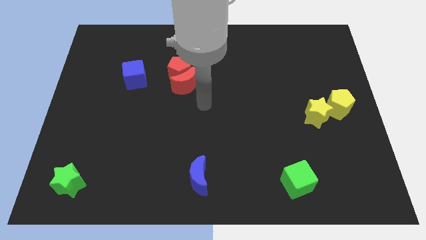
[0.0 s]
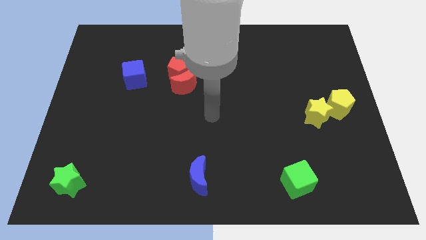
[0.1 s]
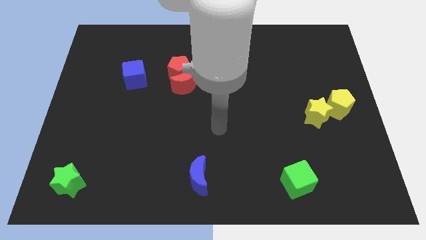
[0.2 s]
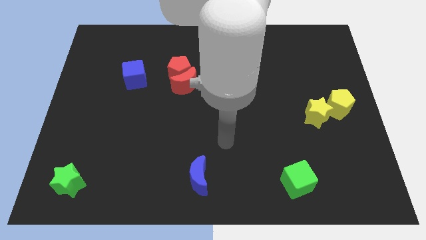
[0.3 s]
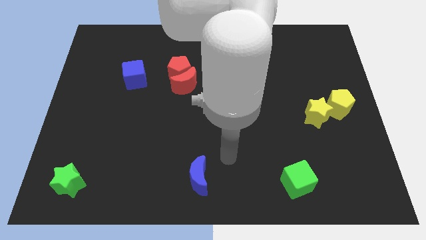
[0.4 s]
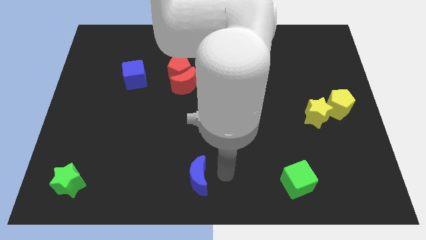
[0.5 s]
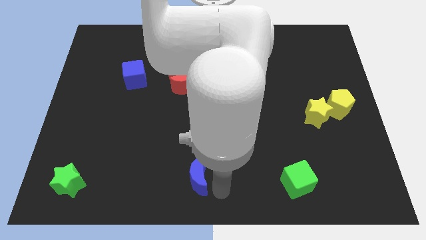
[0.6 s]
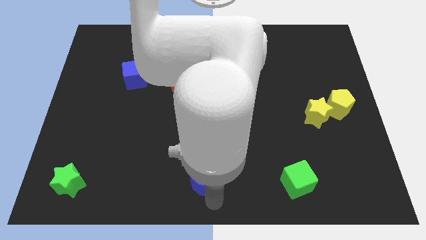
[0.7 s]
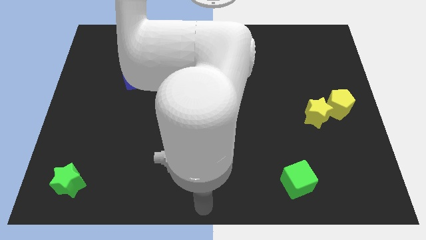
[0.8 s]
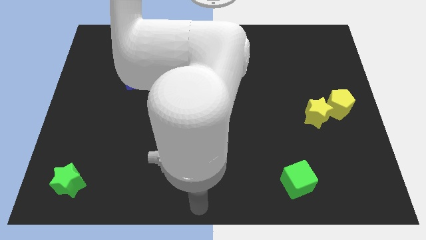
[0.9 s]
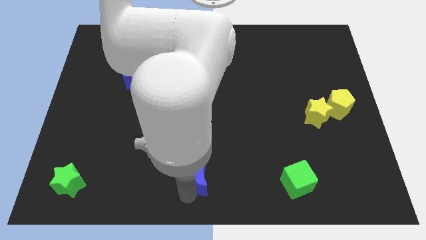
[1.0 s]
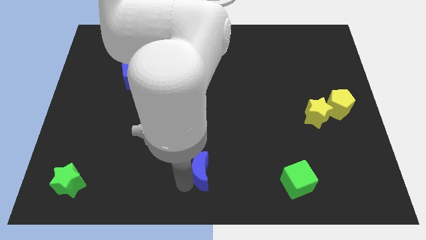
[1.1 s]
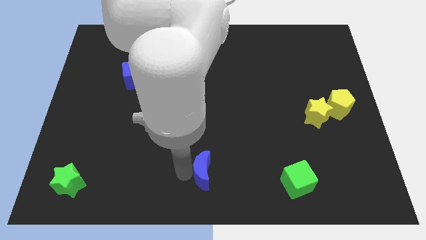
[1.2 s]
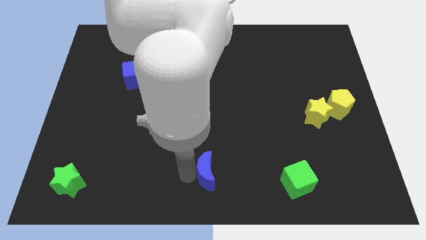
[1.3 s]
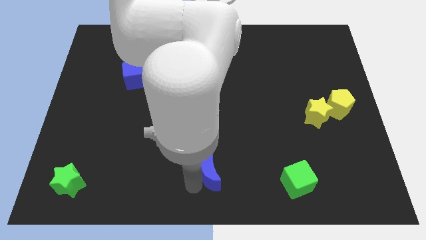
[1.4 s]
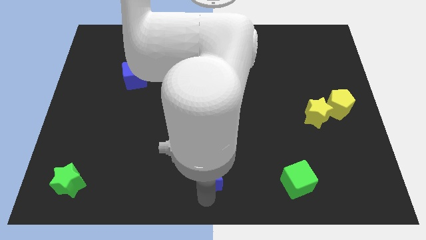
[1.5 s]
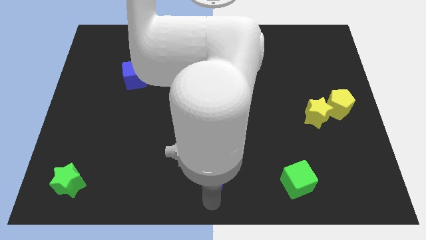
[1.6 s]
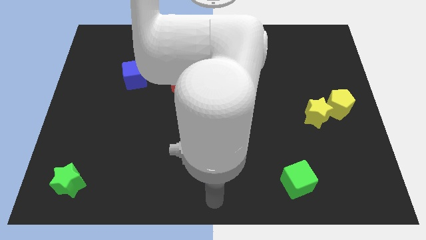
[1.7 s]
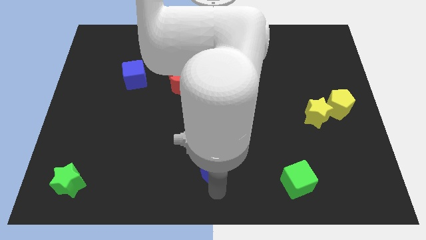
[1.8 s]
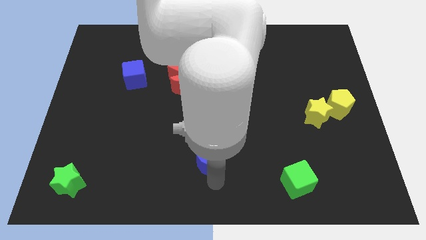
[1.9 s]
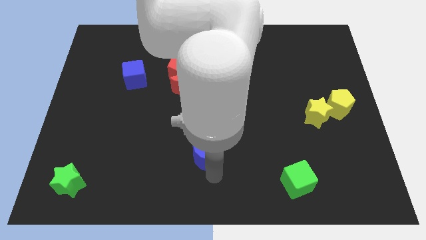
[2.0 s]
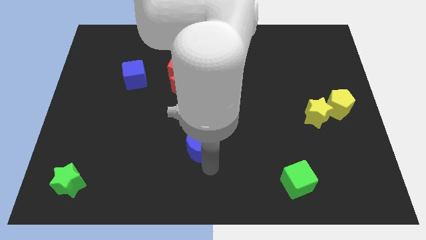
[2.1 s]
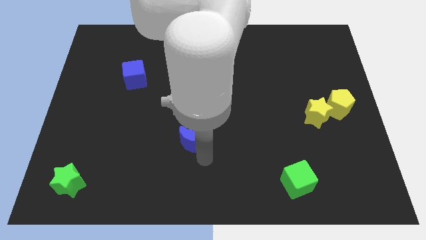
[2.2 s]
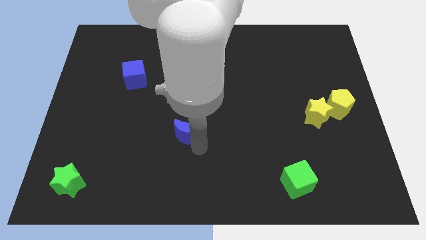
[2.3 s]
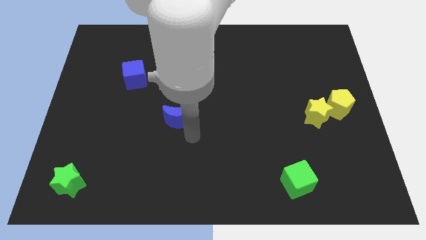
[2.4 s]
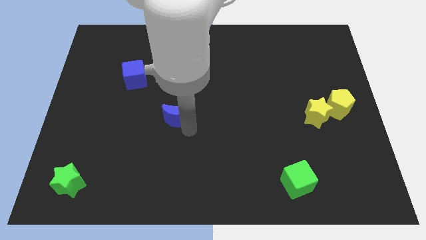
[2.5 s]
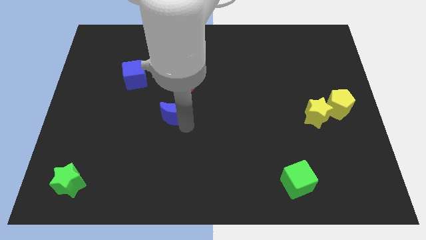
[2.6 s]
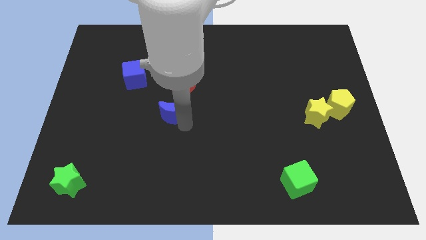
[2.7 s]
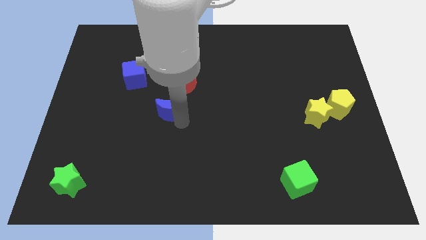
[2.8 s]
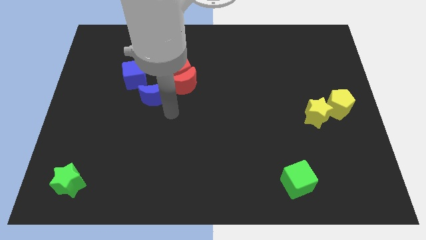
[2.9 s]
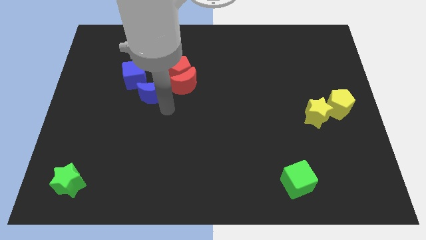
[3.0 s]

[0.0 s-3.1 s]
move the blue crescent right below the blue cube

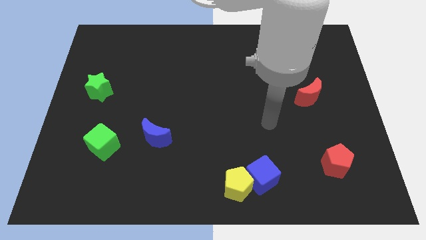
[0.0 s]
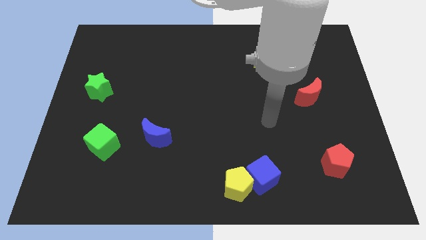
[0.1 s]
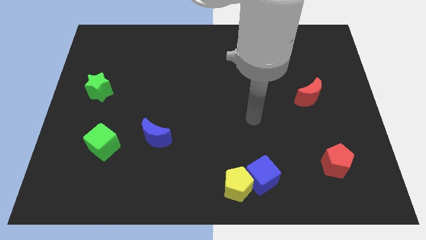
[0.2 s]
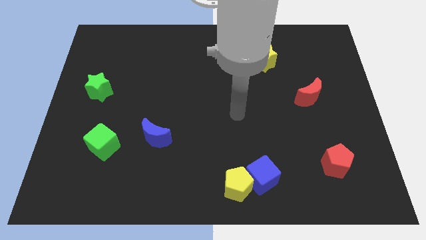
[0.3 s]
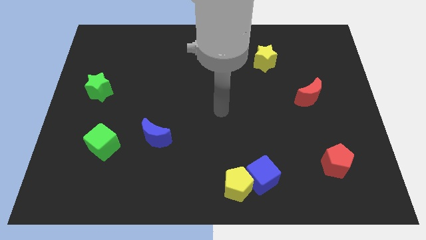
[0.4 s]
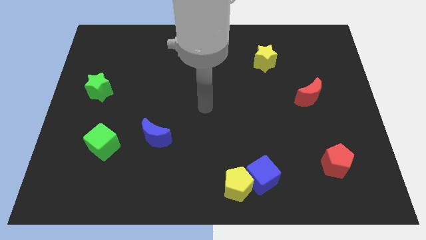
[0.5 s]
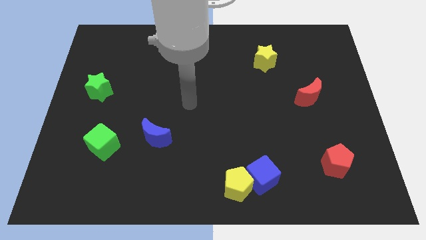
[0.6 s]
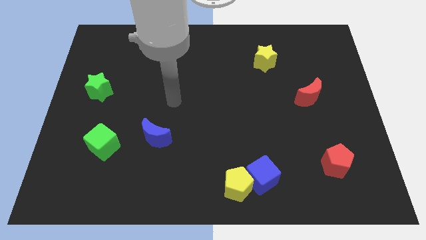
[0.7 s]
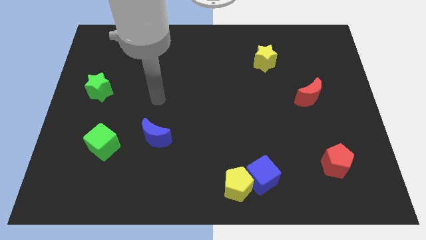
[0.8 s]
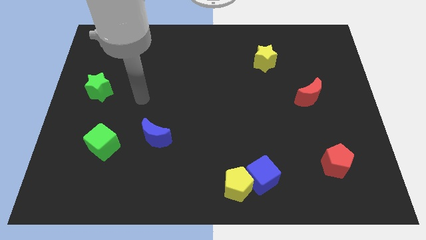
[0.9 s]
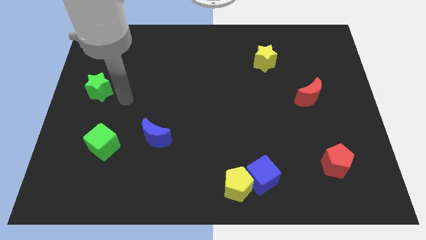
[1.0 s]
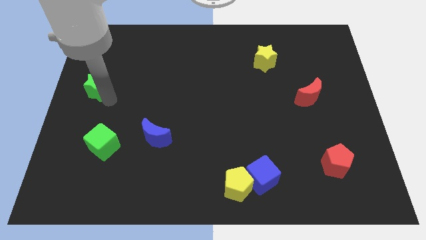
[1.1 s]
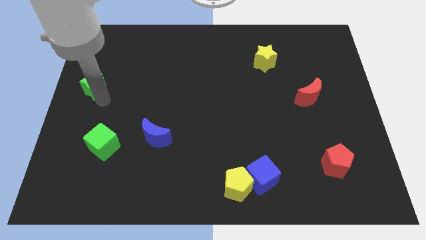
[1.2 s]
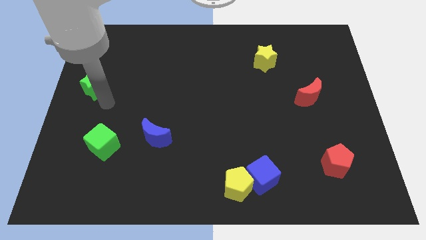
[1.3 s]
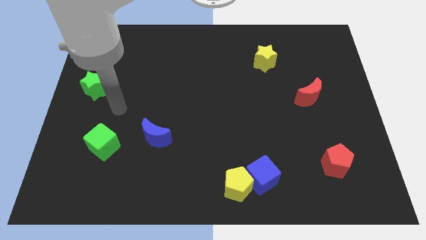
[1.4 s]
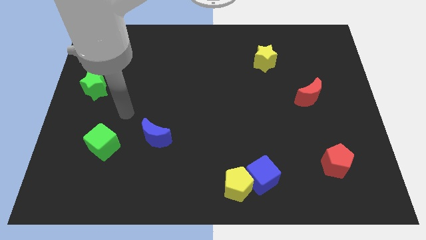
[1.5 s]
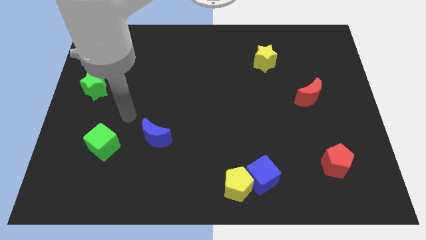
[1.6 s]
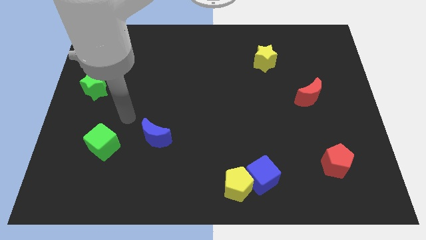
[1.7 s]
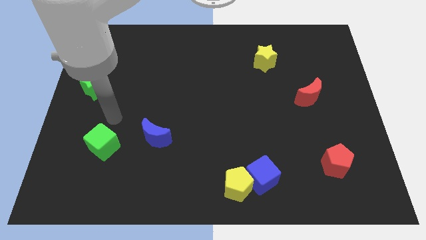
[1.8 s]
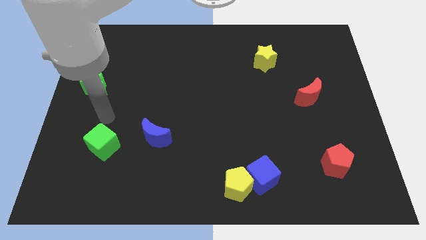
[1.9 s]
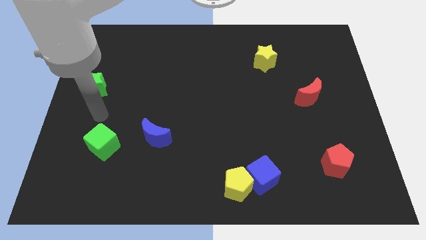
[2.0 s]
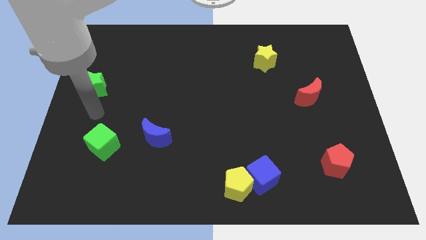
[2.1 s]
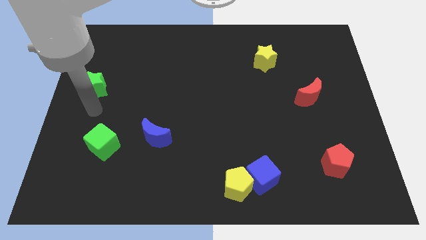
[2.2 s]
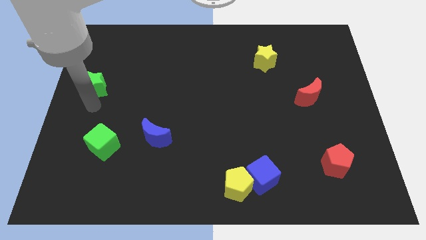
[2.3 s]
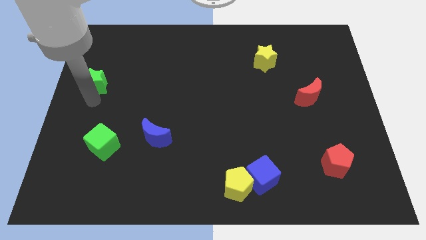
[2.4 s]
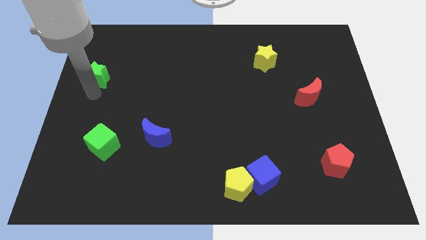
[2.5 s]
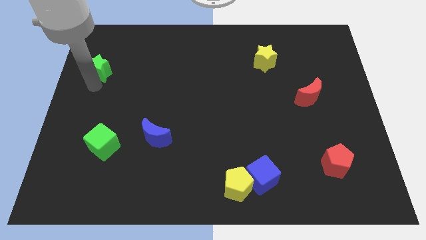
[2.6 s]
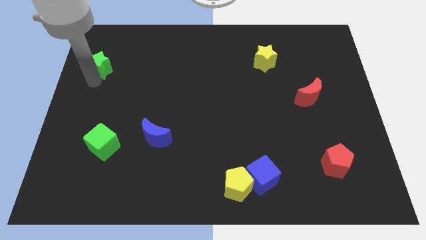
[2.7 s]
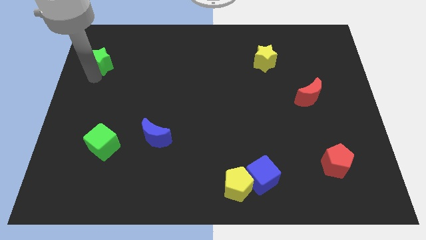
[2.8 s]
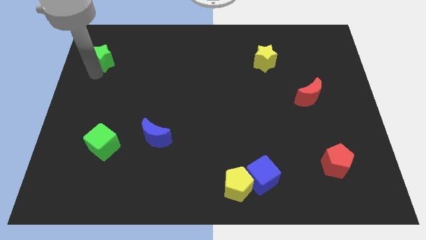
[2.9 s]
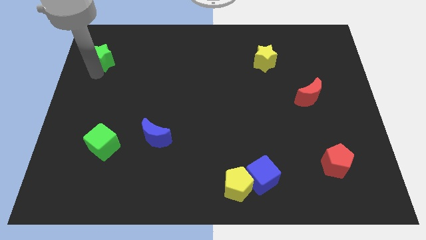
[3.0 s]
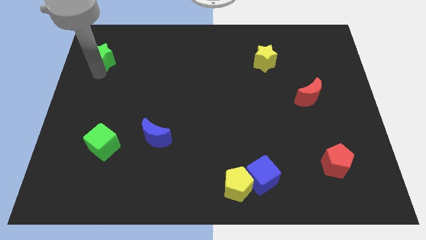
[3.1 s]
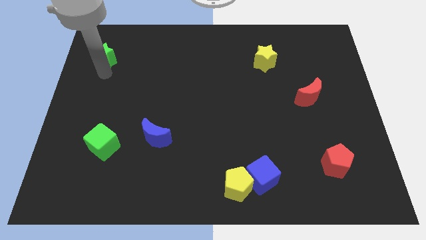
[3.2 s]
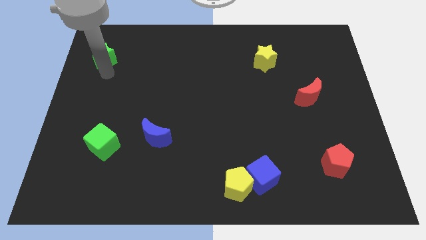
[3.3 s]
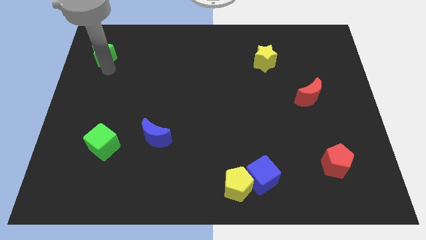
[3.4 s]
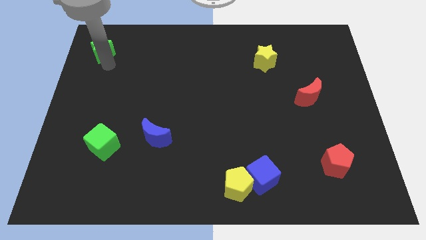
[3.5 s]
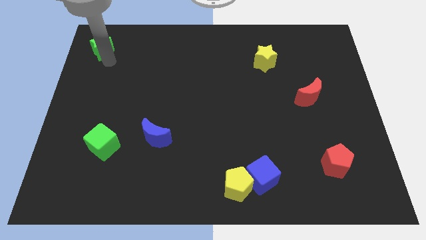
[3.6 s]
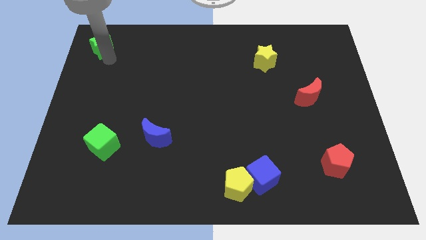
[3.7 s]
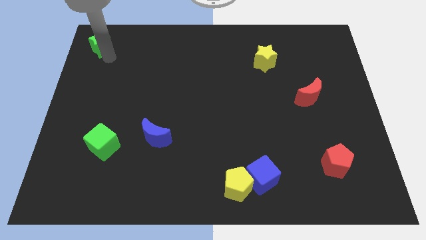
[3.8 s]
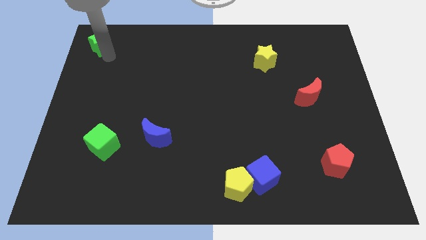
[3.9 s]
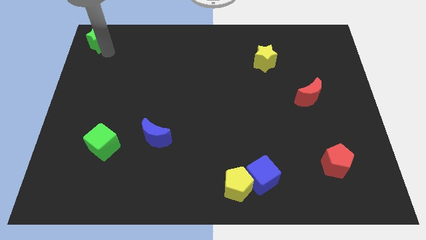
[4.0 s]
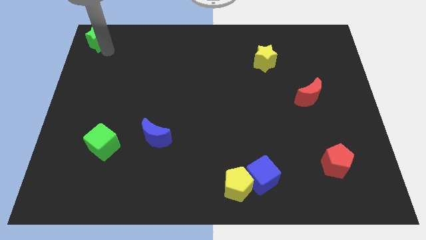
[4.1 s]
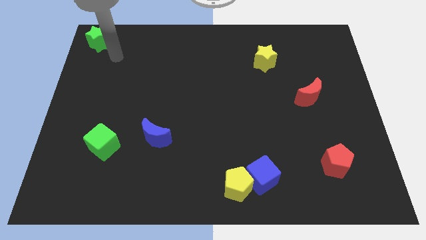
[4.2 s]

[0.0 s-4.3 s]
move the green star to the top left corner of the board

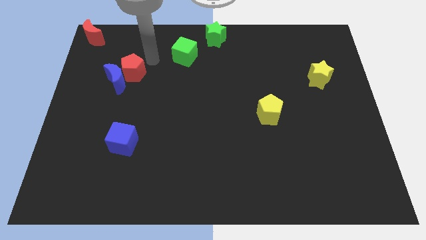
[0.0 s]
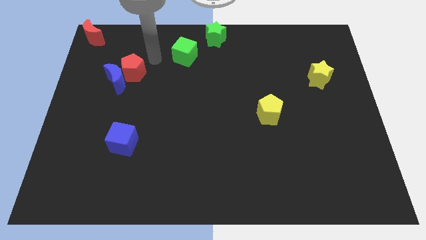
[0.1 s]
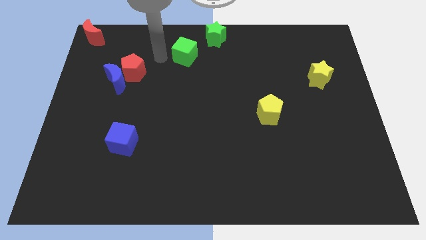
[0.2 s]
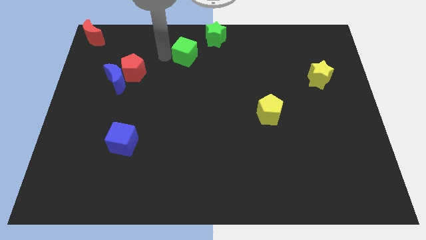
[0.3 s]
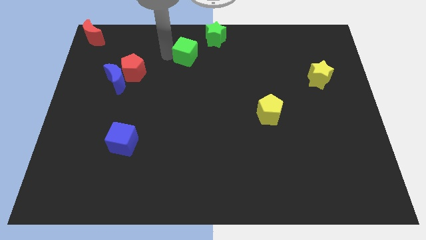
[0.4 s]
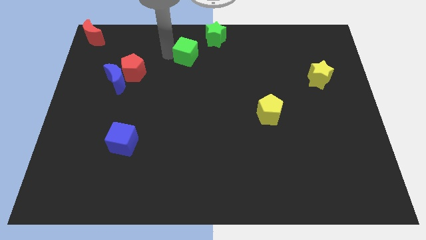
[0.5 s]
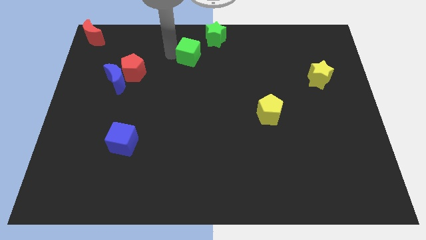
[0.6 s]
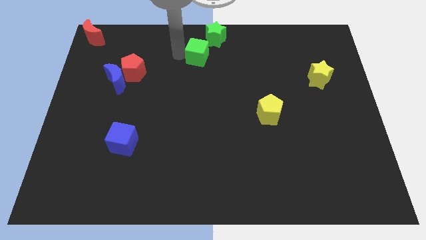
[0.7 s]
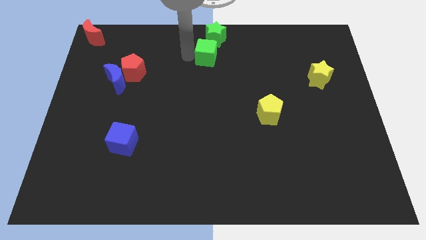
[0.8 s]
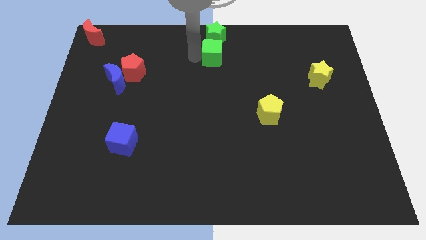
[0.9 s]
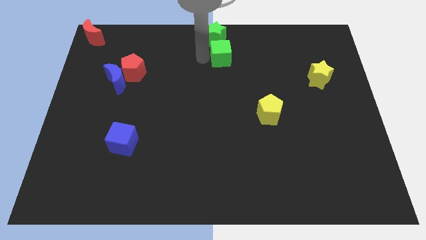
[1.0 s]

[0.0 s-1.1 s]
slide green cube below the green star

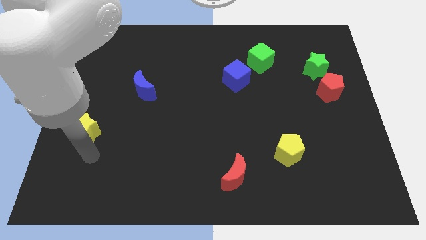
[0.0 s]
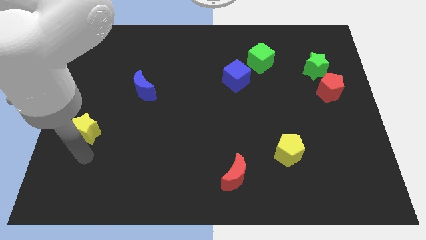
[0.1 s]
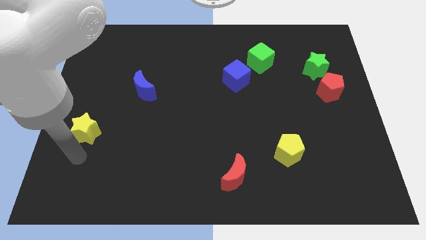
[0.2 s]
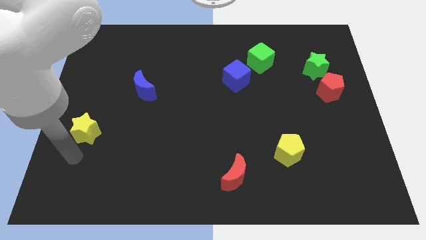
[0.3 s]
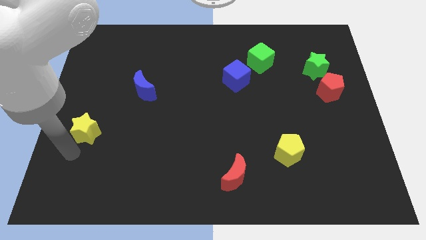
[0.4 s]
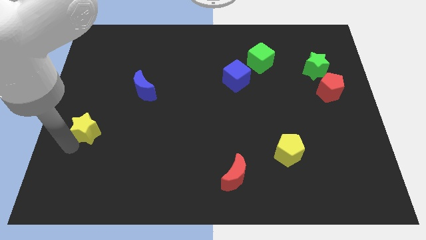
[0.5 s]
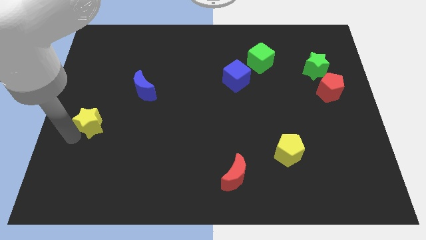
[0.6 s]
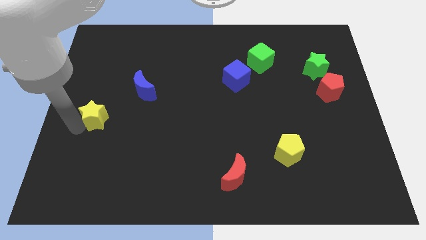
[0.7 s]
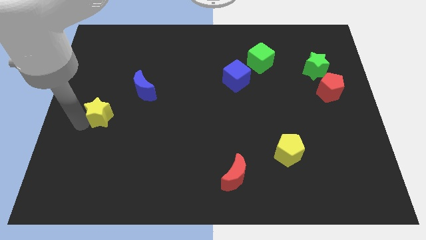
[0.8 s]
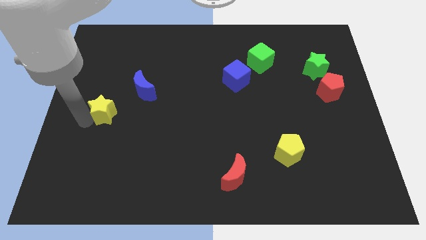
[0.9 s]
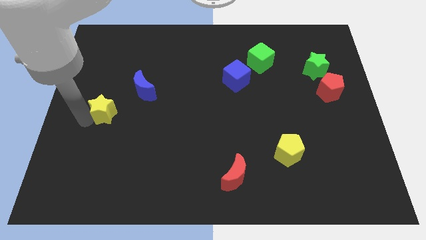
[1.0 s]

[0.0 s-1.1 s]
move yellow star slightly upwards
